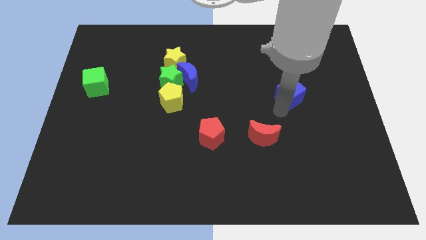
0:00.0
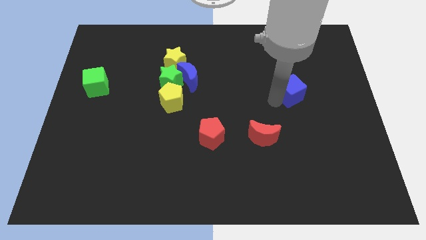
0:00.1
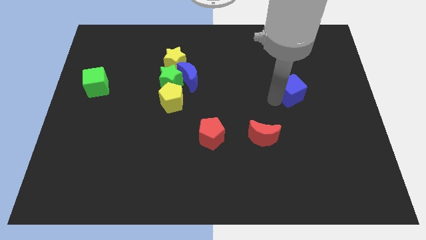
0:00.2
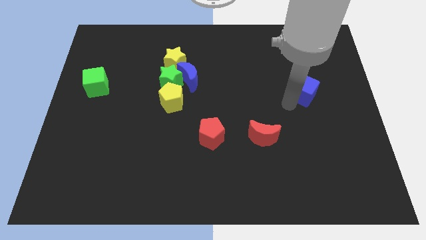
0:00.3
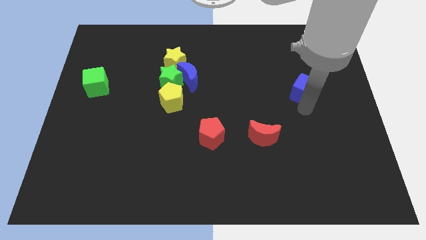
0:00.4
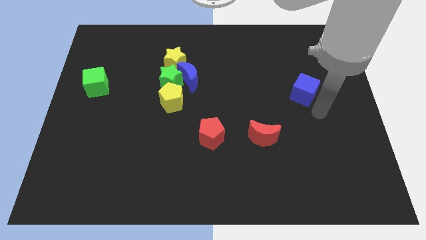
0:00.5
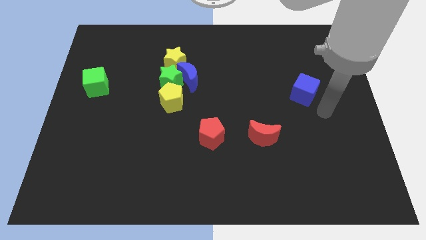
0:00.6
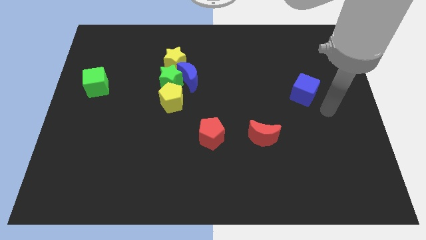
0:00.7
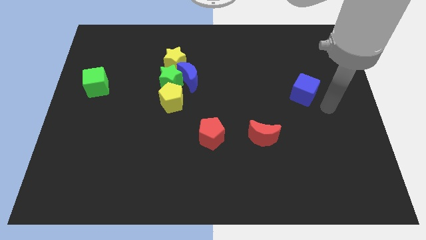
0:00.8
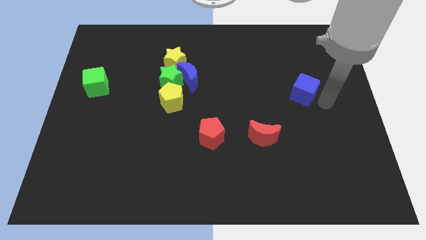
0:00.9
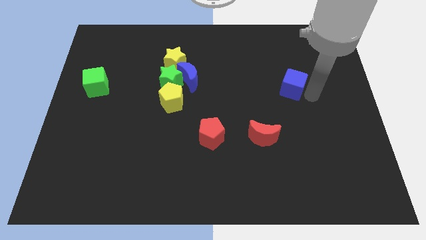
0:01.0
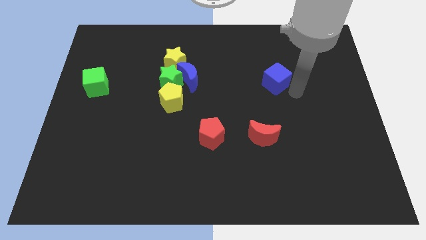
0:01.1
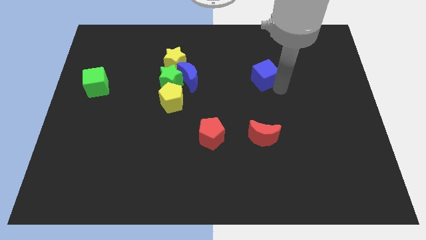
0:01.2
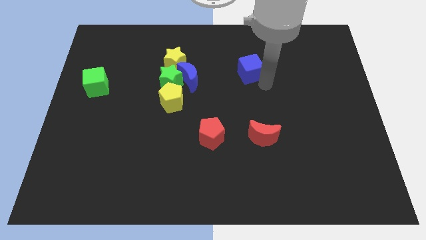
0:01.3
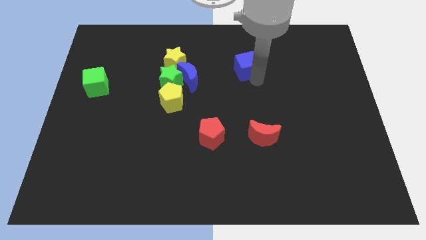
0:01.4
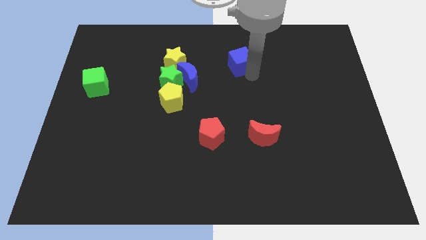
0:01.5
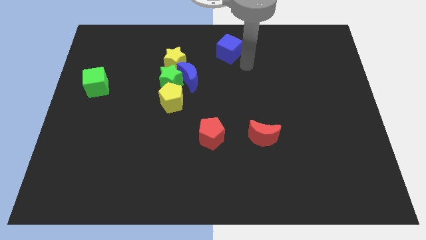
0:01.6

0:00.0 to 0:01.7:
move the blue cube to the top center of the board

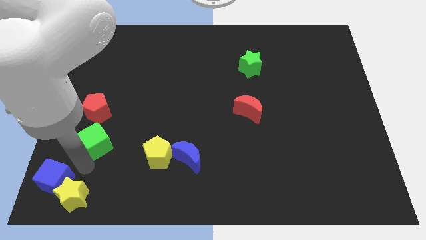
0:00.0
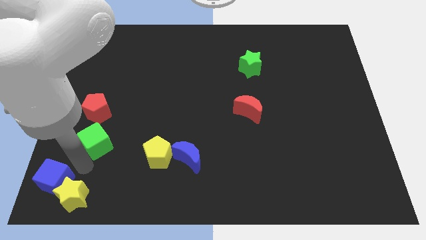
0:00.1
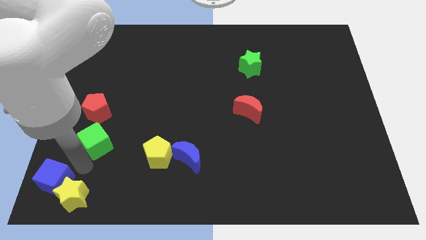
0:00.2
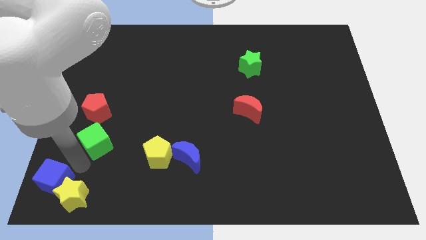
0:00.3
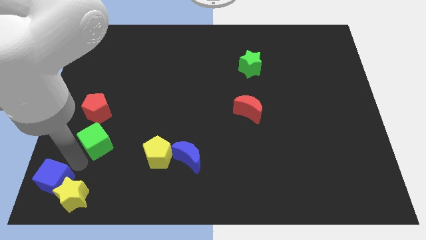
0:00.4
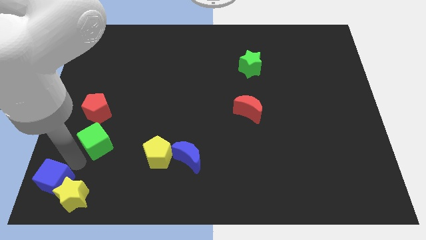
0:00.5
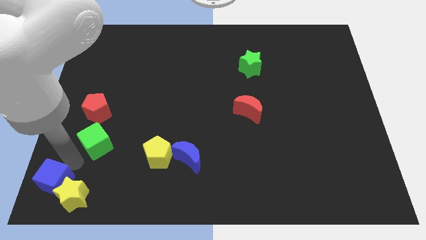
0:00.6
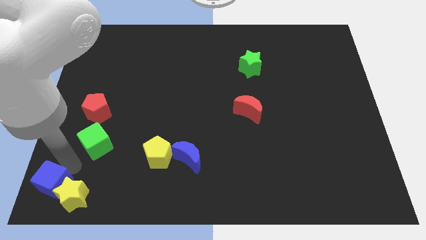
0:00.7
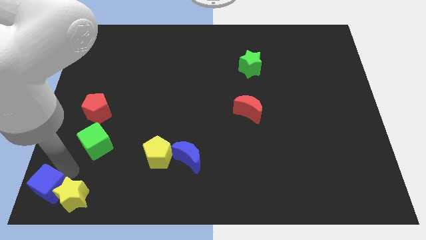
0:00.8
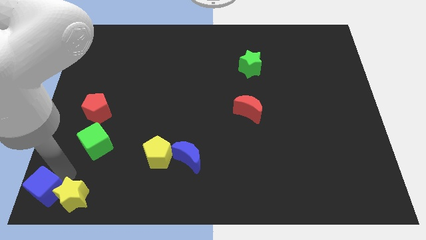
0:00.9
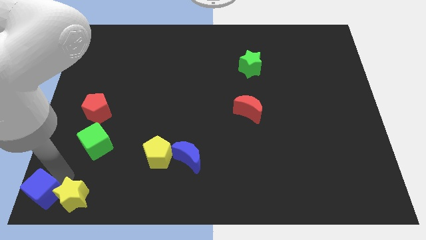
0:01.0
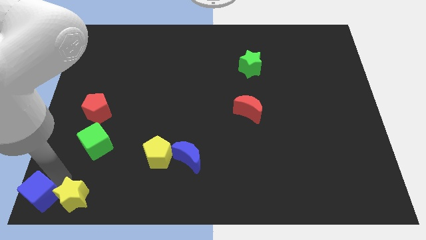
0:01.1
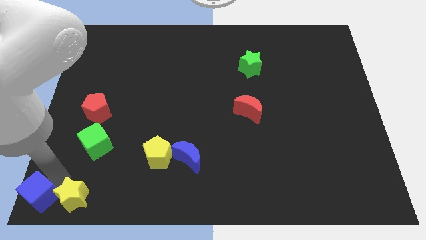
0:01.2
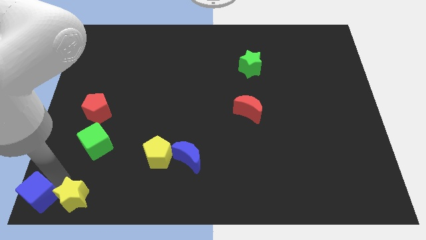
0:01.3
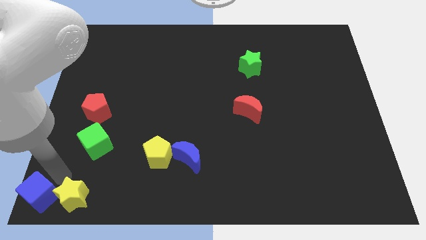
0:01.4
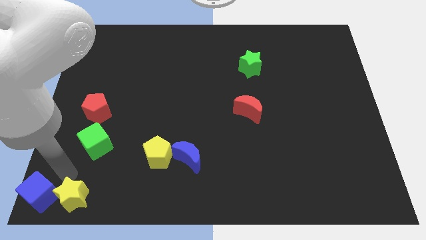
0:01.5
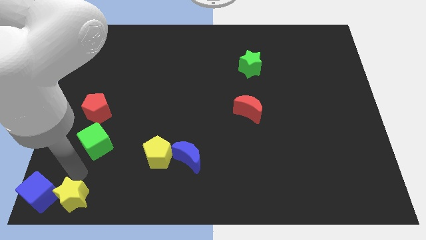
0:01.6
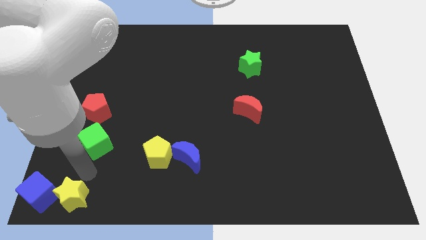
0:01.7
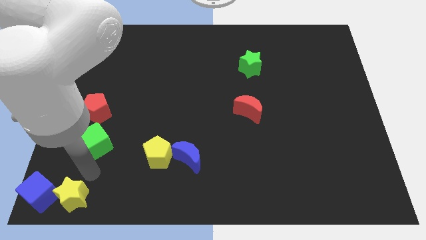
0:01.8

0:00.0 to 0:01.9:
place the blue cube at the bottom left of the board

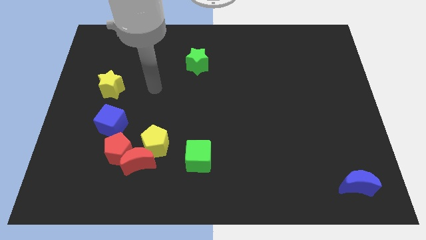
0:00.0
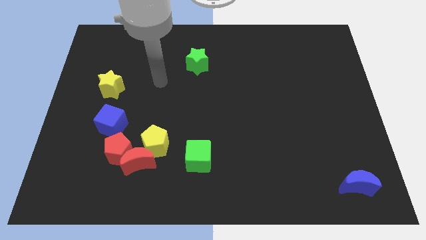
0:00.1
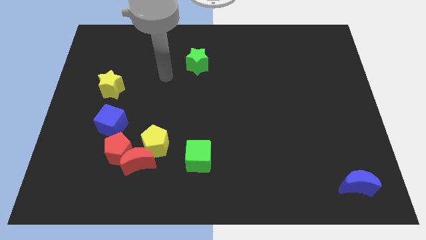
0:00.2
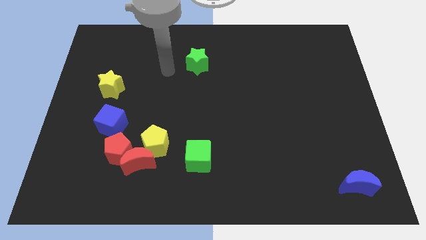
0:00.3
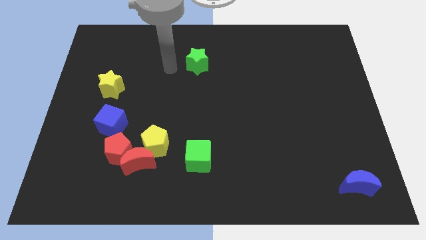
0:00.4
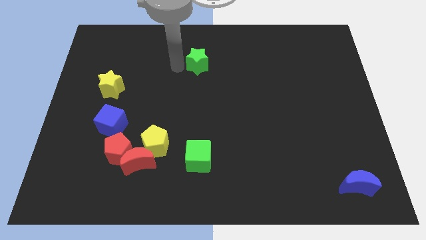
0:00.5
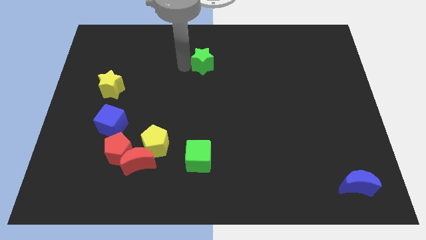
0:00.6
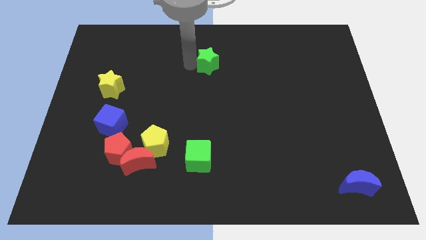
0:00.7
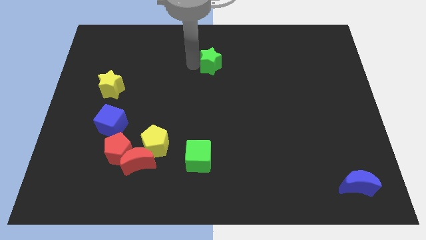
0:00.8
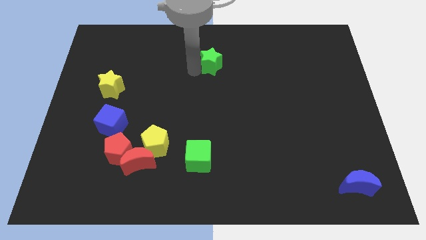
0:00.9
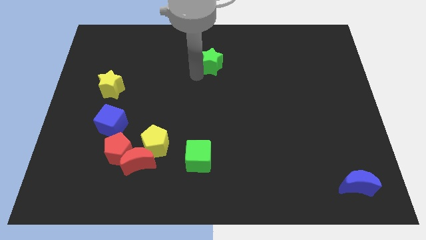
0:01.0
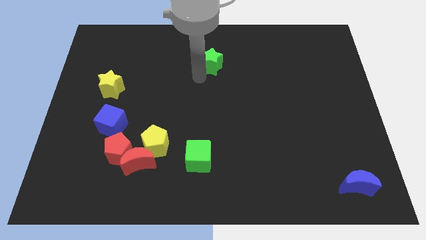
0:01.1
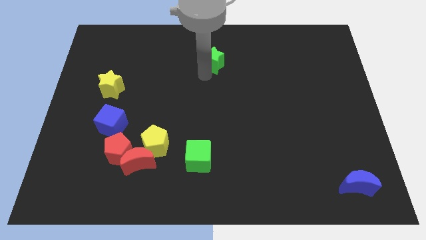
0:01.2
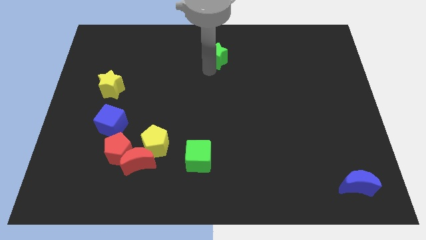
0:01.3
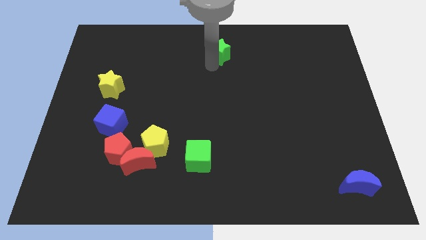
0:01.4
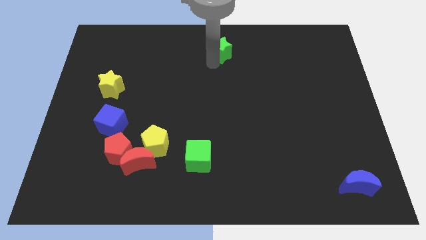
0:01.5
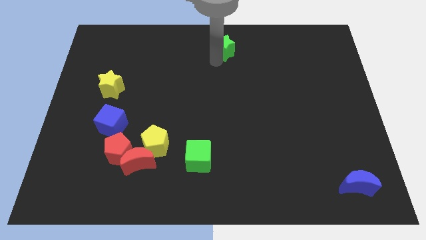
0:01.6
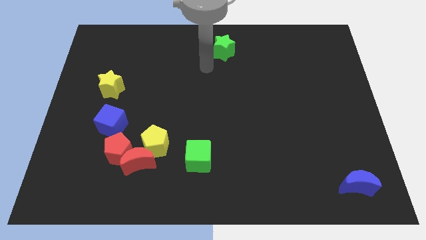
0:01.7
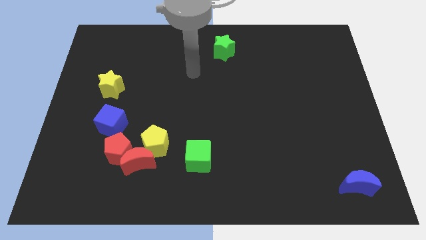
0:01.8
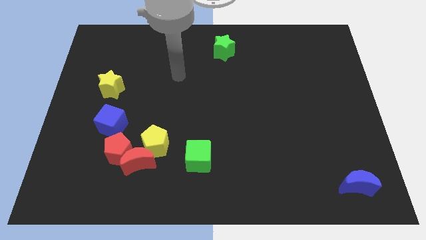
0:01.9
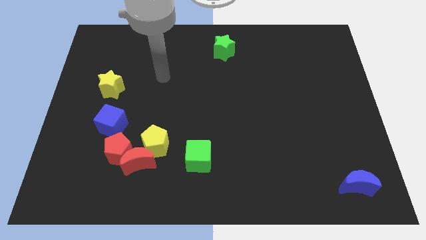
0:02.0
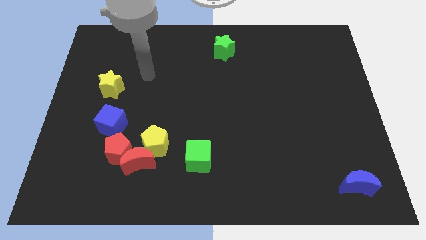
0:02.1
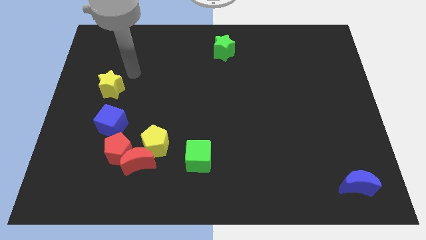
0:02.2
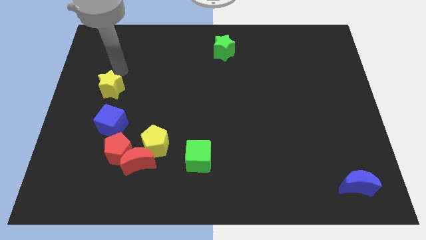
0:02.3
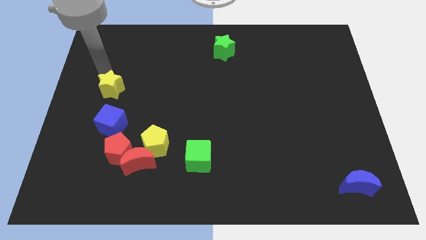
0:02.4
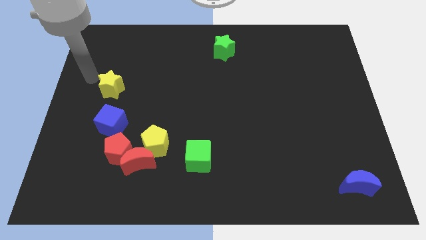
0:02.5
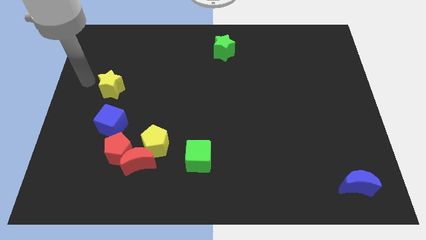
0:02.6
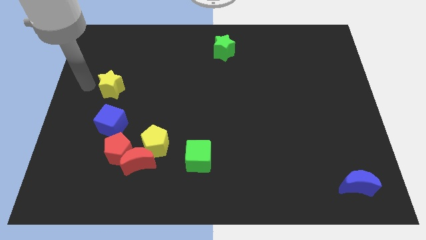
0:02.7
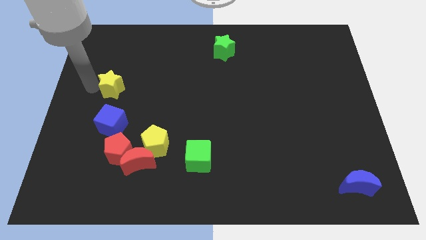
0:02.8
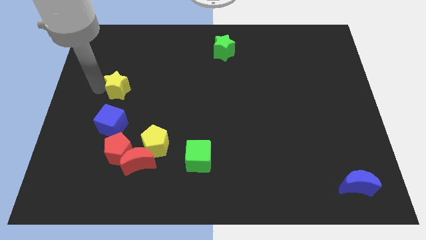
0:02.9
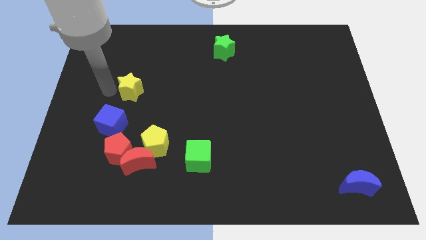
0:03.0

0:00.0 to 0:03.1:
place the green star at the top center of the board

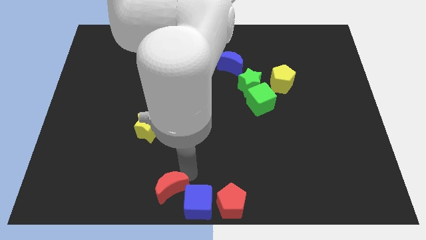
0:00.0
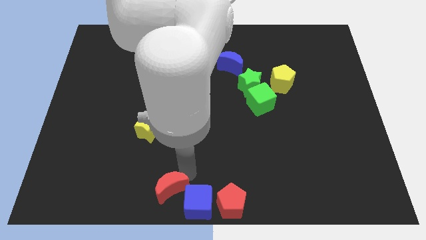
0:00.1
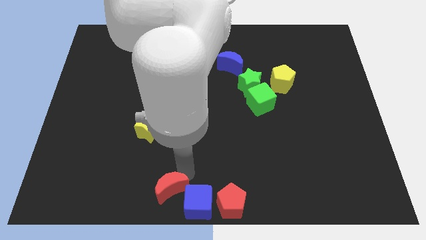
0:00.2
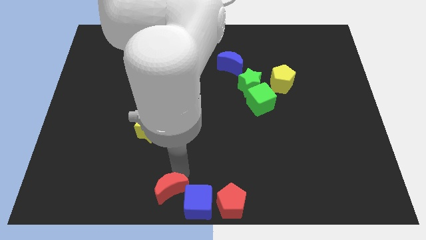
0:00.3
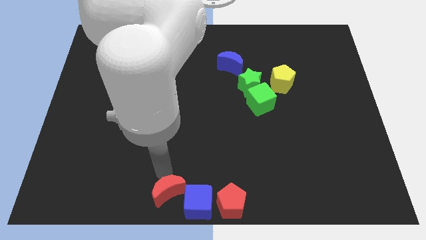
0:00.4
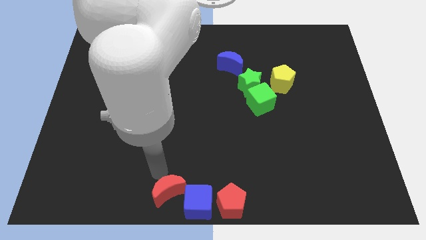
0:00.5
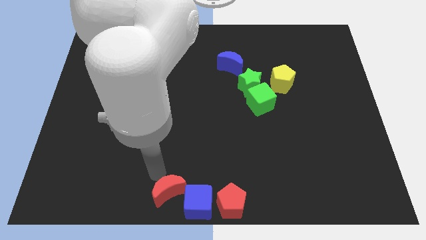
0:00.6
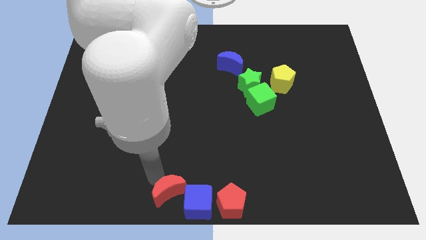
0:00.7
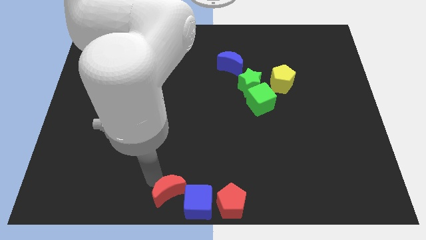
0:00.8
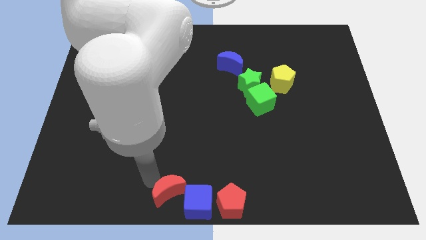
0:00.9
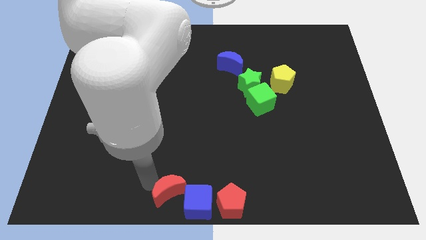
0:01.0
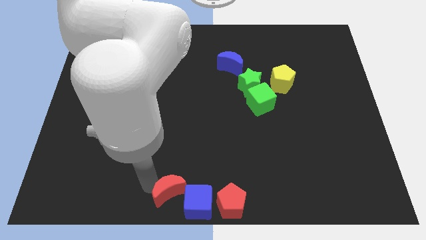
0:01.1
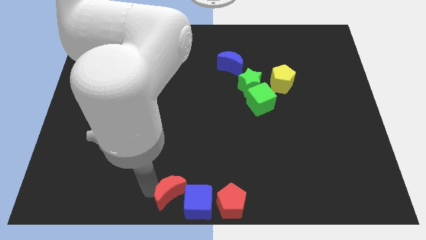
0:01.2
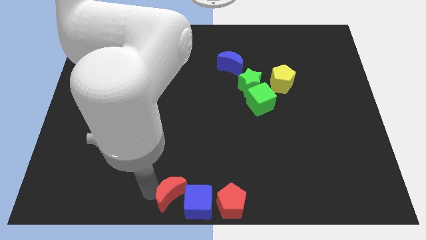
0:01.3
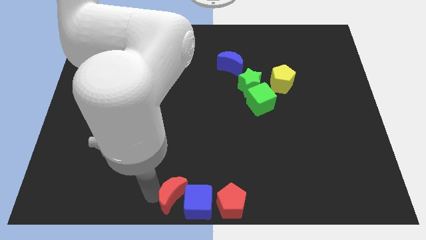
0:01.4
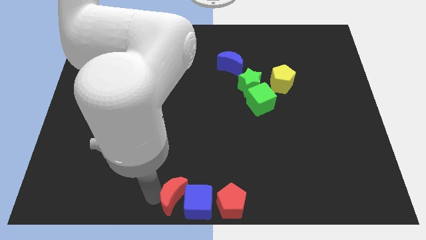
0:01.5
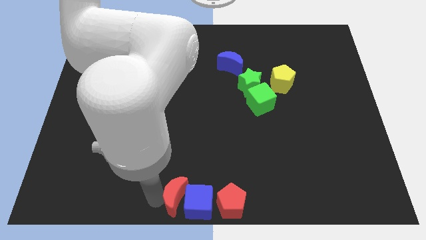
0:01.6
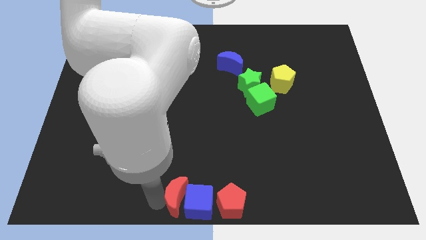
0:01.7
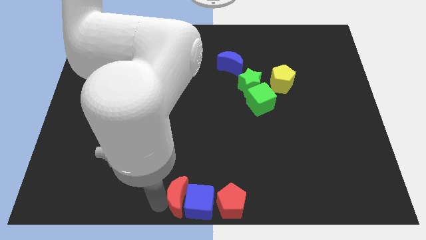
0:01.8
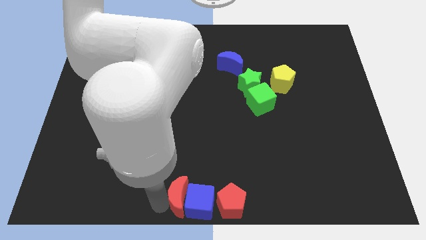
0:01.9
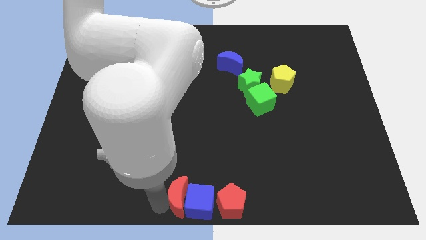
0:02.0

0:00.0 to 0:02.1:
push the red crescent to the left of the blue cube

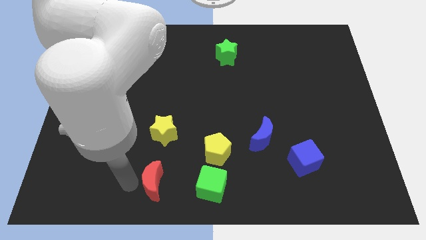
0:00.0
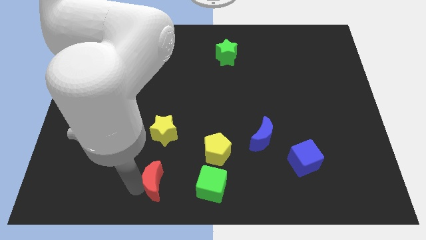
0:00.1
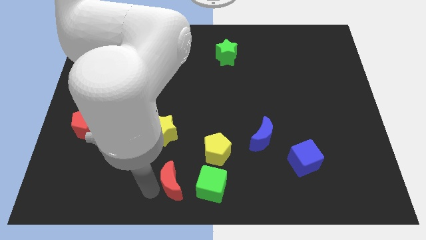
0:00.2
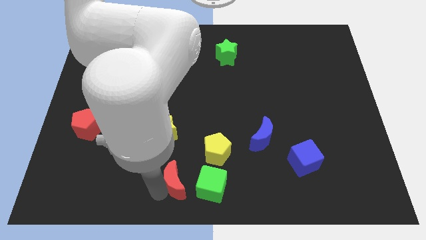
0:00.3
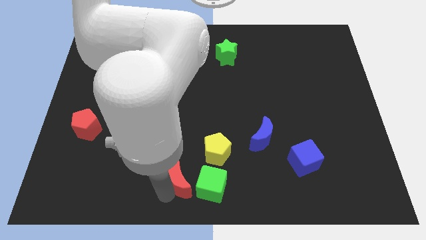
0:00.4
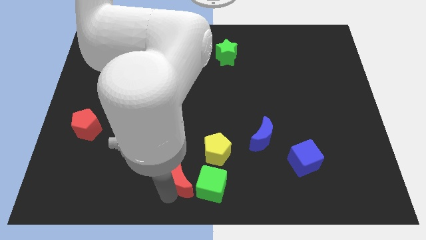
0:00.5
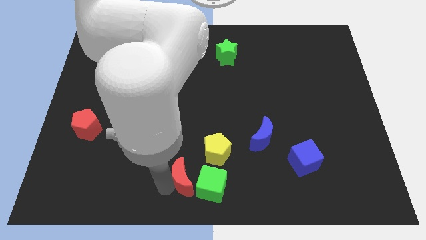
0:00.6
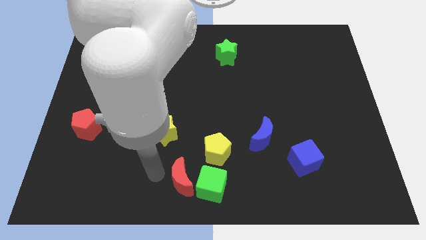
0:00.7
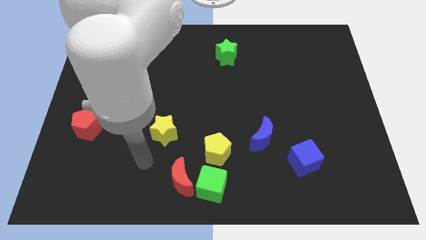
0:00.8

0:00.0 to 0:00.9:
place the red moon left to the green cube
